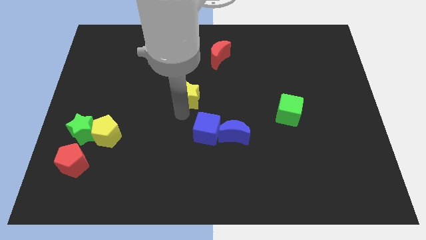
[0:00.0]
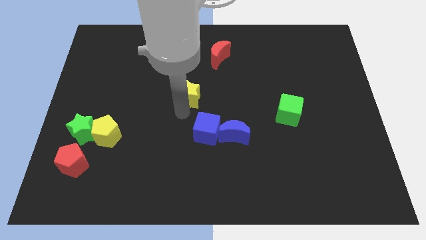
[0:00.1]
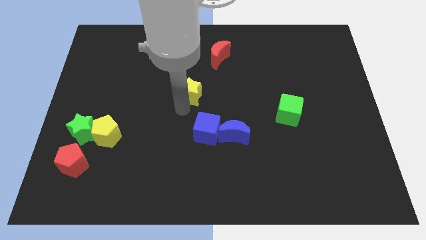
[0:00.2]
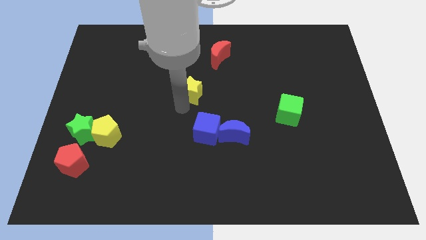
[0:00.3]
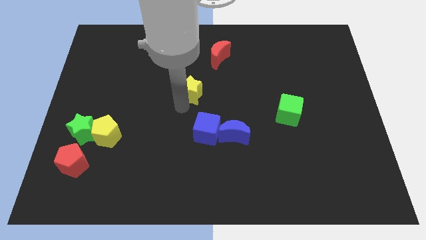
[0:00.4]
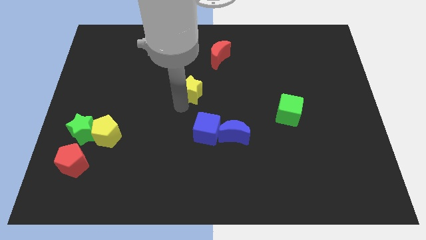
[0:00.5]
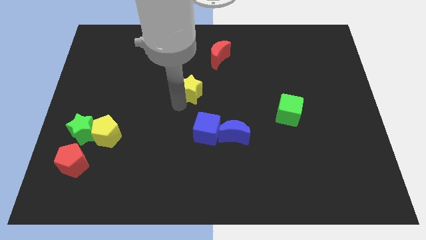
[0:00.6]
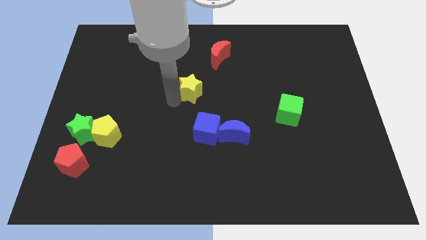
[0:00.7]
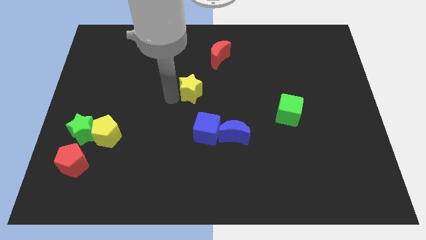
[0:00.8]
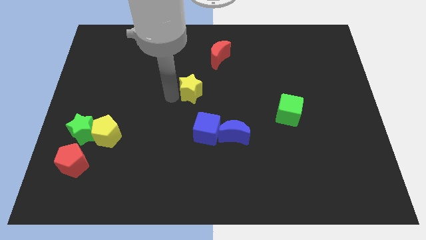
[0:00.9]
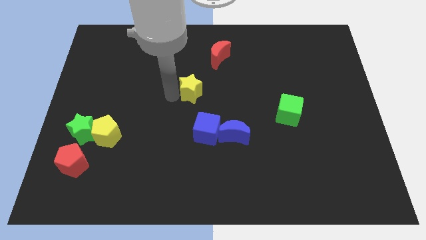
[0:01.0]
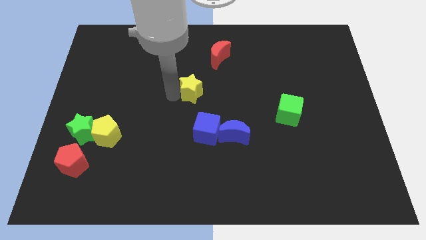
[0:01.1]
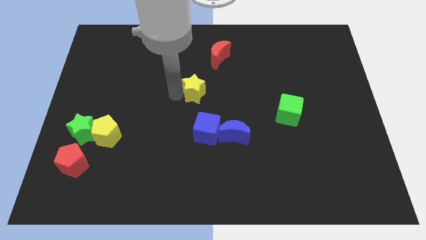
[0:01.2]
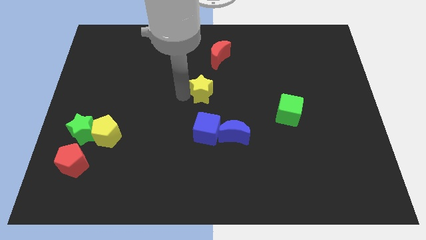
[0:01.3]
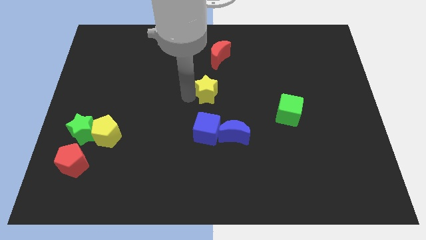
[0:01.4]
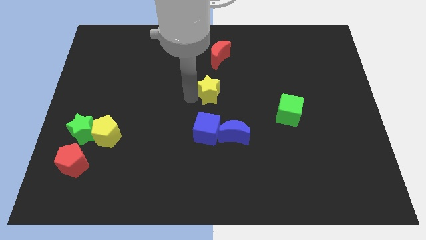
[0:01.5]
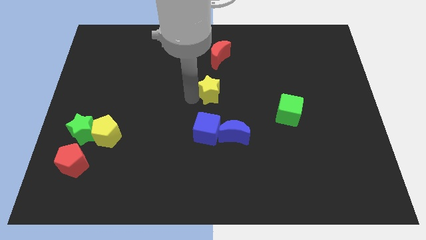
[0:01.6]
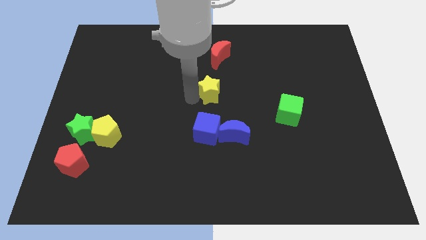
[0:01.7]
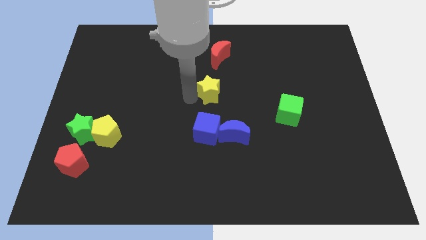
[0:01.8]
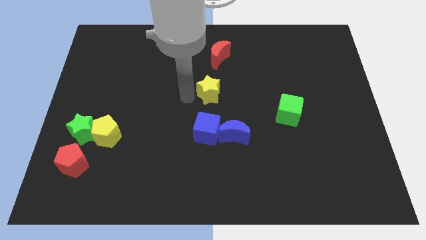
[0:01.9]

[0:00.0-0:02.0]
place the yellow star above blue cube

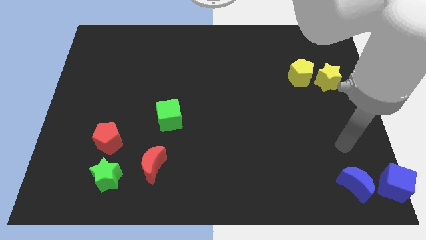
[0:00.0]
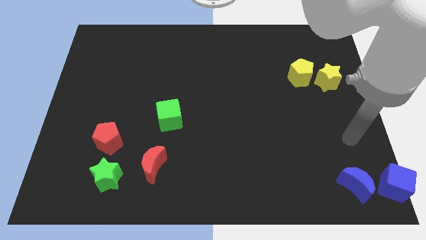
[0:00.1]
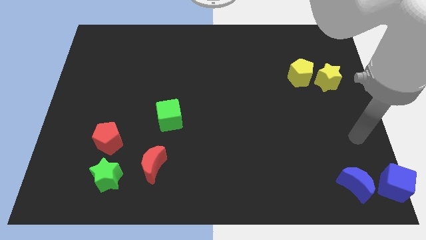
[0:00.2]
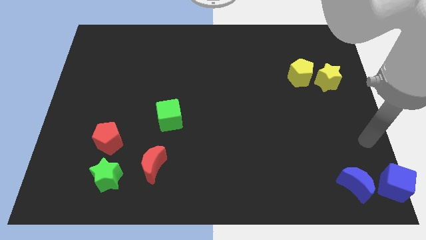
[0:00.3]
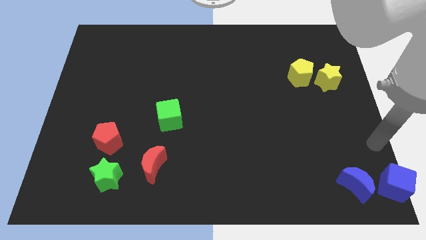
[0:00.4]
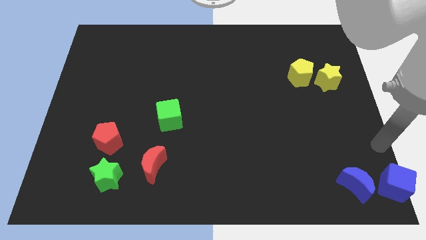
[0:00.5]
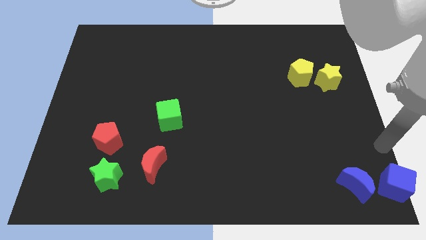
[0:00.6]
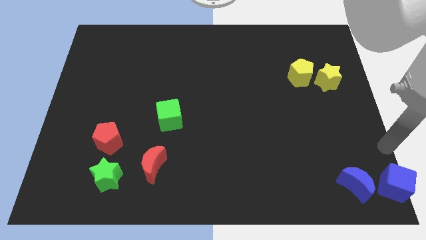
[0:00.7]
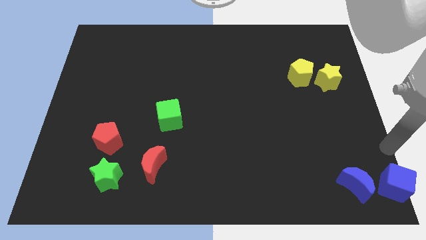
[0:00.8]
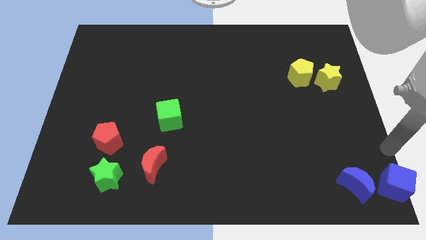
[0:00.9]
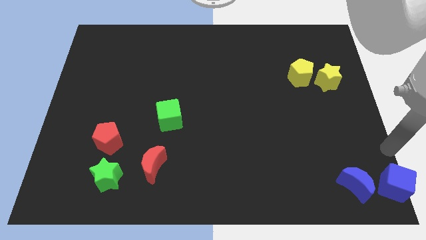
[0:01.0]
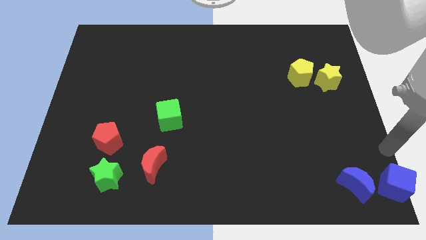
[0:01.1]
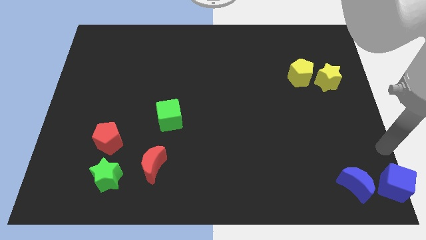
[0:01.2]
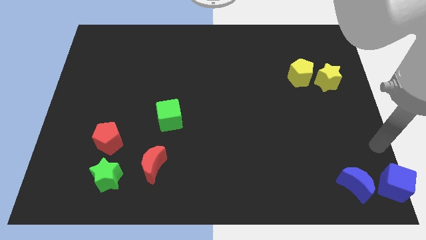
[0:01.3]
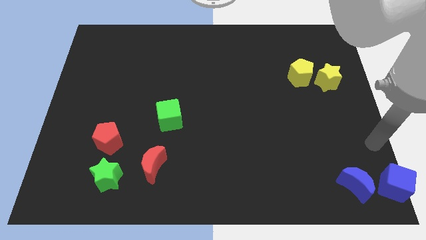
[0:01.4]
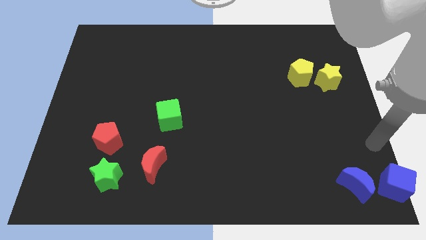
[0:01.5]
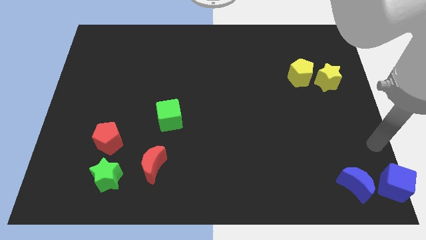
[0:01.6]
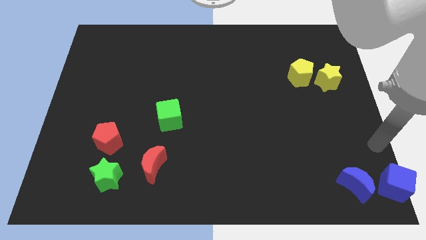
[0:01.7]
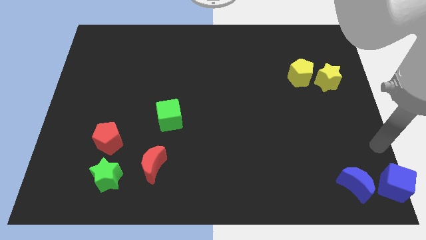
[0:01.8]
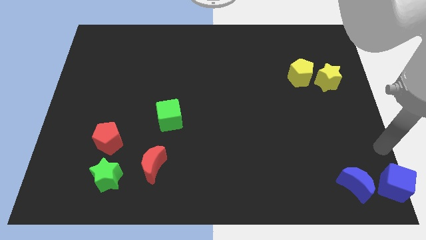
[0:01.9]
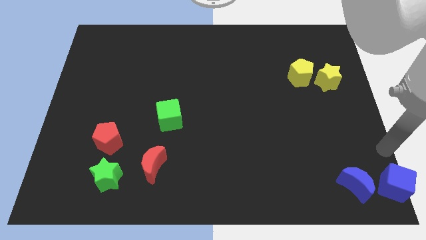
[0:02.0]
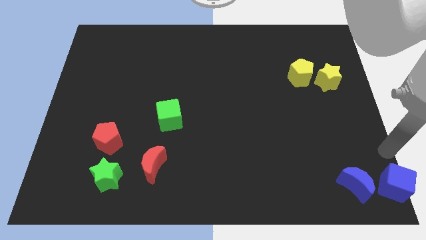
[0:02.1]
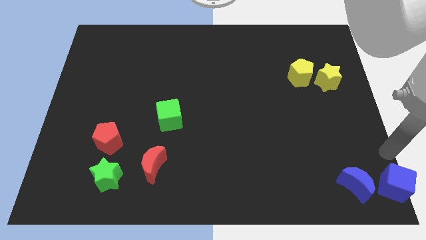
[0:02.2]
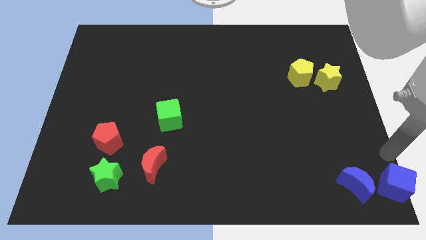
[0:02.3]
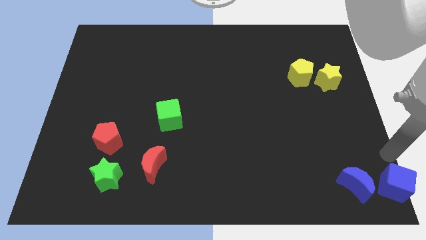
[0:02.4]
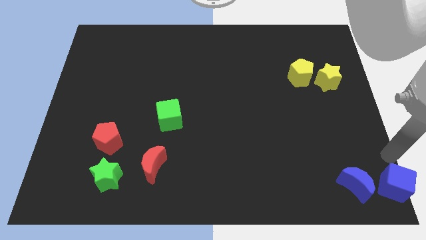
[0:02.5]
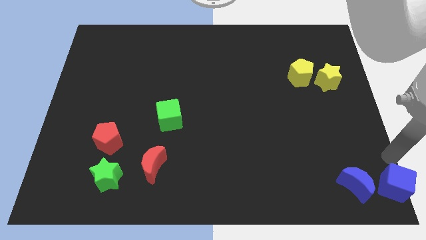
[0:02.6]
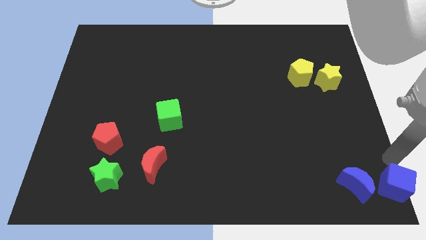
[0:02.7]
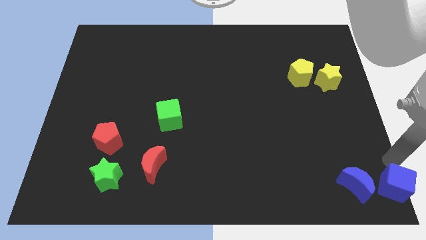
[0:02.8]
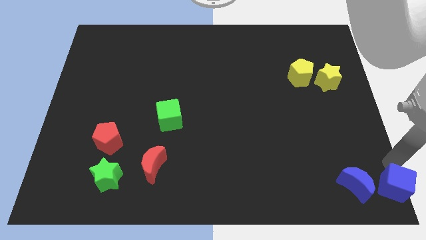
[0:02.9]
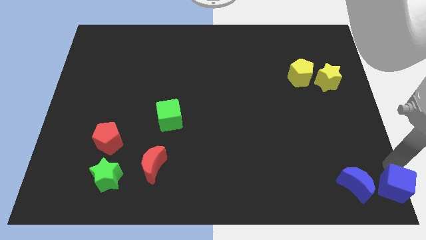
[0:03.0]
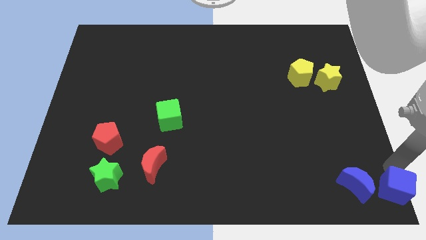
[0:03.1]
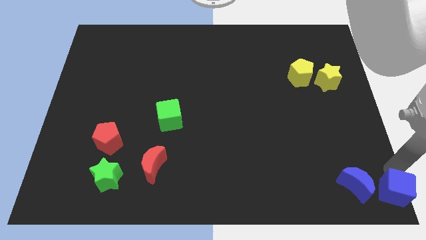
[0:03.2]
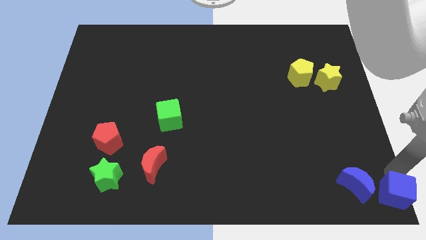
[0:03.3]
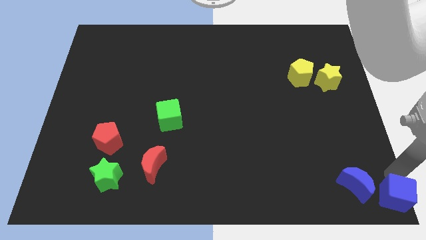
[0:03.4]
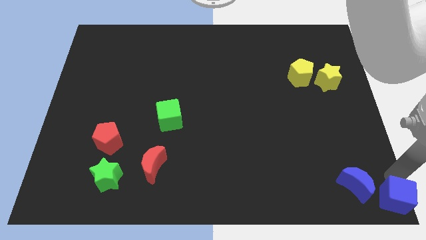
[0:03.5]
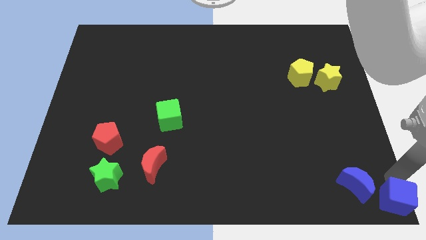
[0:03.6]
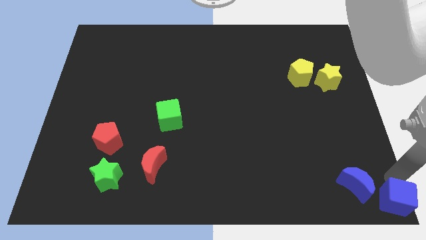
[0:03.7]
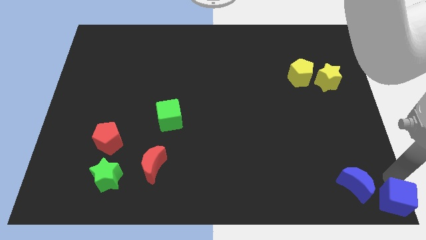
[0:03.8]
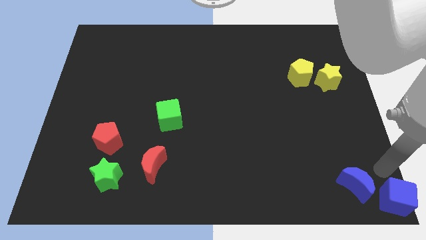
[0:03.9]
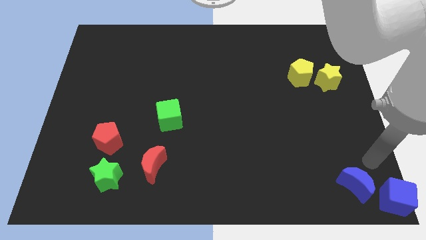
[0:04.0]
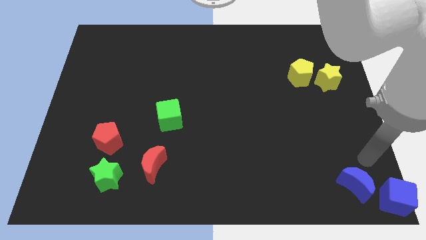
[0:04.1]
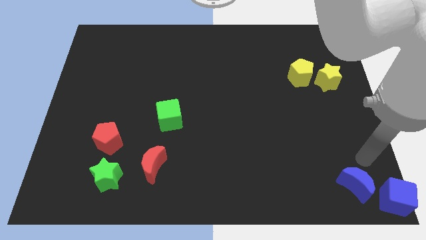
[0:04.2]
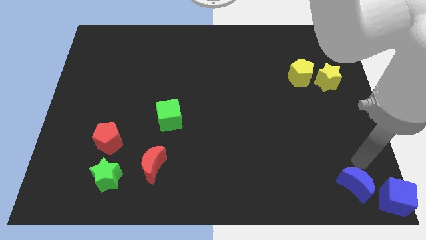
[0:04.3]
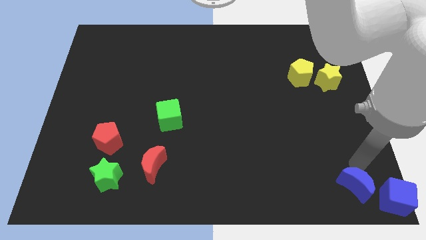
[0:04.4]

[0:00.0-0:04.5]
push blue cube to the bottom right corner

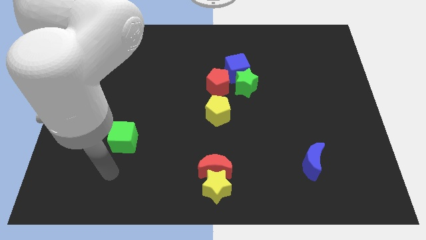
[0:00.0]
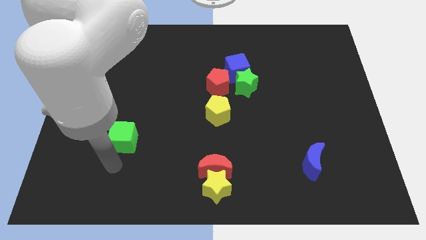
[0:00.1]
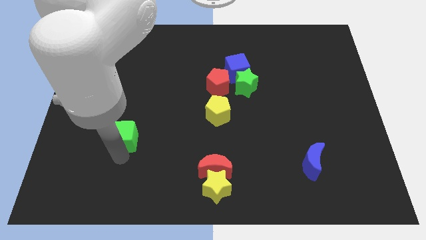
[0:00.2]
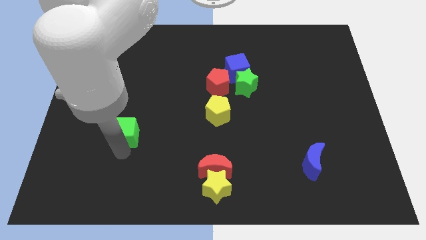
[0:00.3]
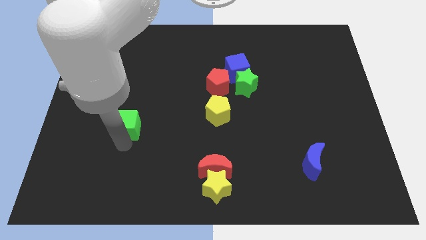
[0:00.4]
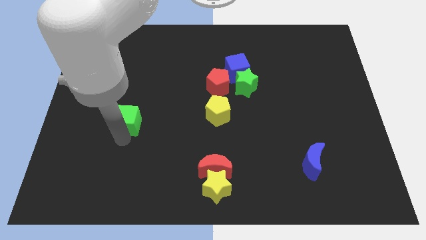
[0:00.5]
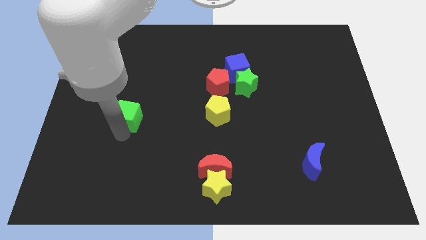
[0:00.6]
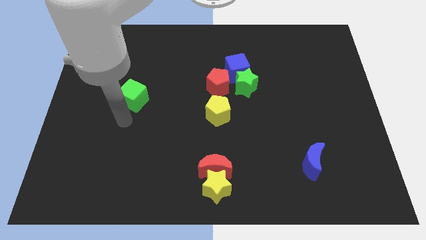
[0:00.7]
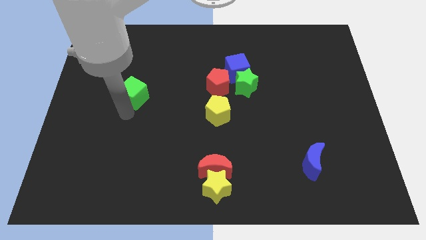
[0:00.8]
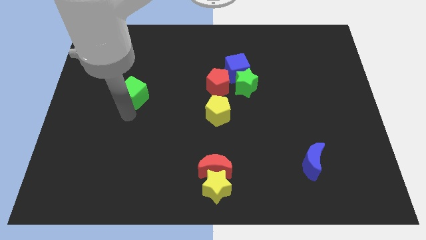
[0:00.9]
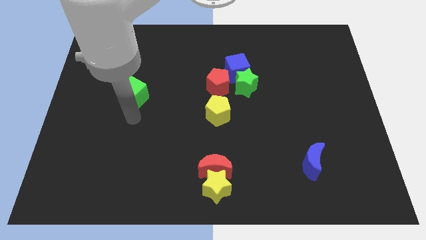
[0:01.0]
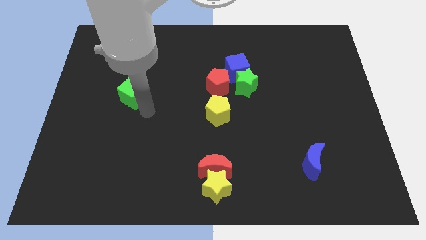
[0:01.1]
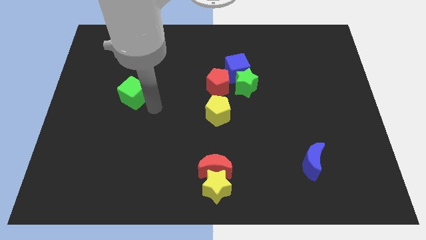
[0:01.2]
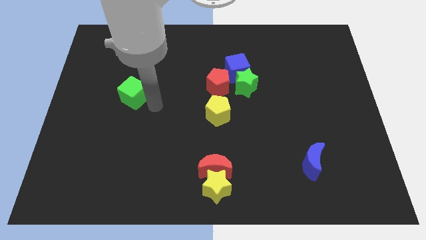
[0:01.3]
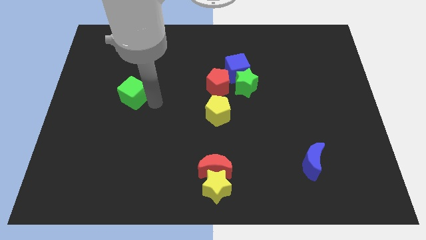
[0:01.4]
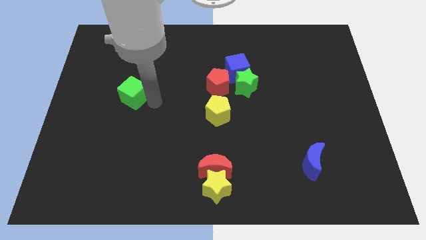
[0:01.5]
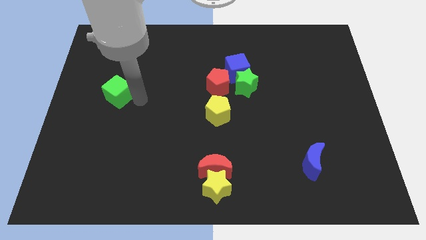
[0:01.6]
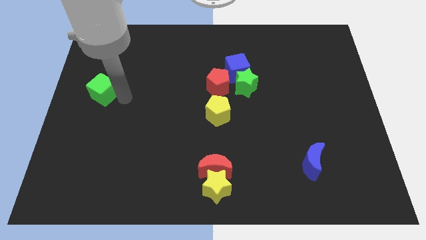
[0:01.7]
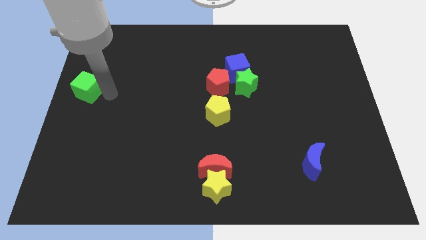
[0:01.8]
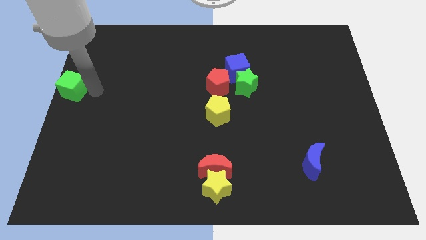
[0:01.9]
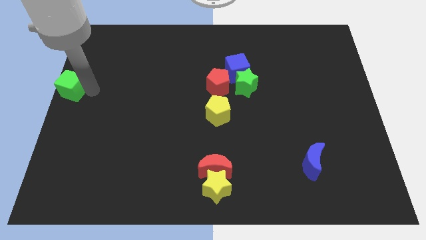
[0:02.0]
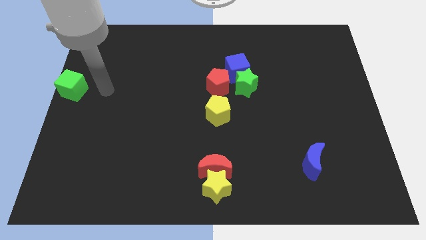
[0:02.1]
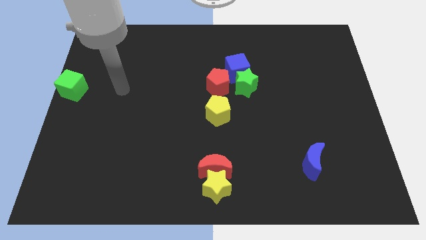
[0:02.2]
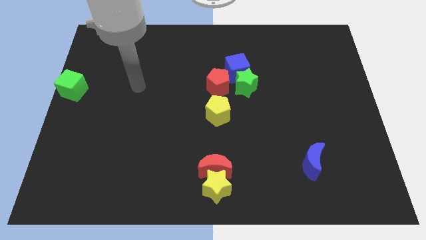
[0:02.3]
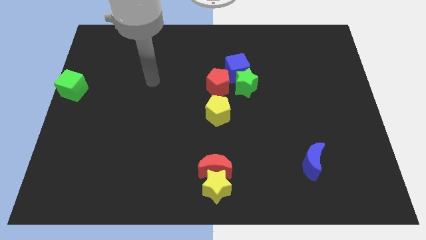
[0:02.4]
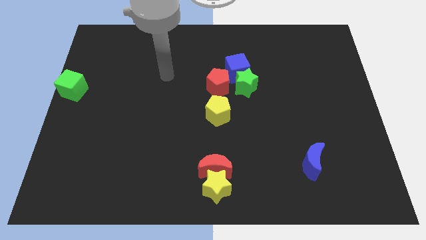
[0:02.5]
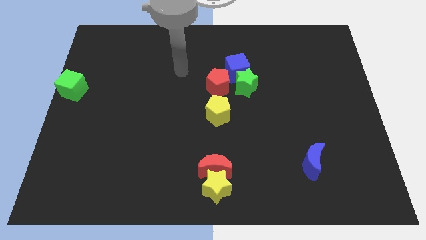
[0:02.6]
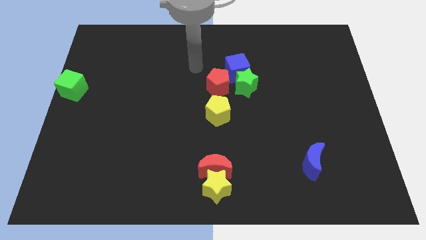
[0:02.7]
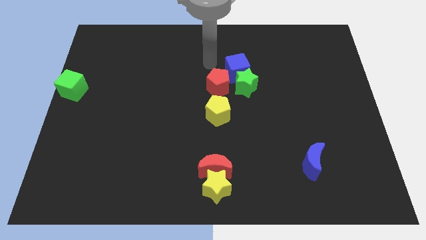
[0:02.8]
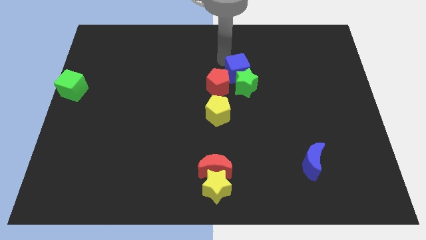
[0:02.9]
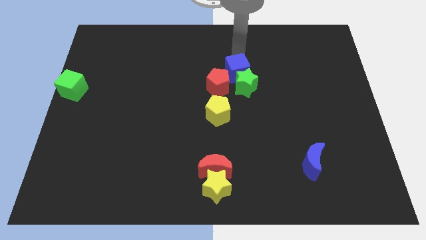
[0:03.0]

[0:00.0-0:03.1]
place the green cube at the left center of the board
